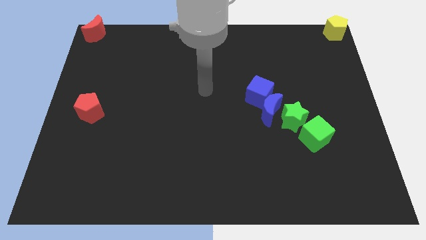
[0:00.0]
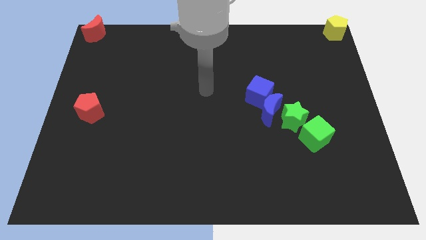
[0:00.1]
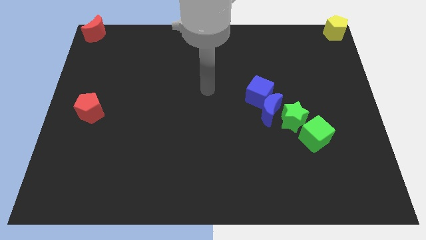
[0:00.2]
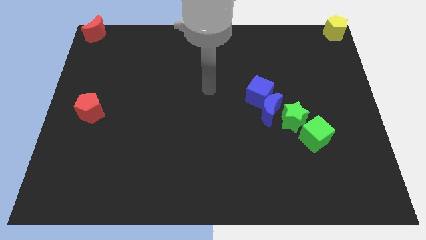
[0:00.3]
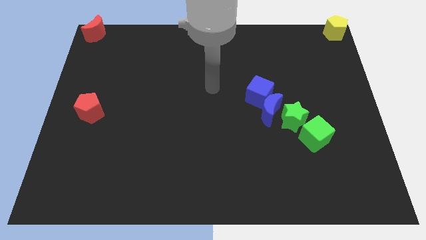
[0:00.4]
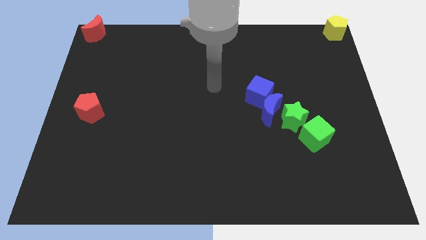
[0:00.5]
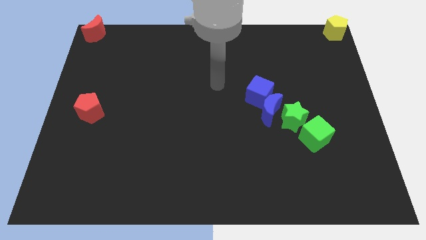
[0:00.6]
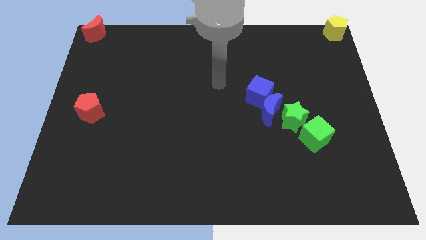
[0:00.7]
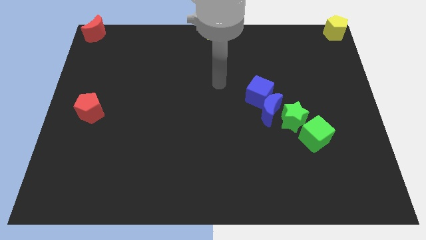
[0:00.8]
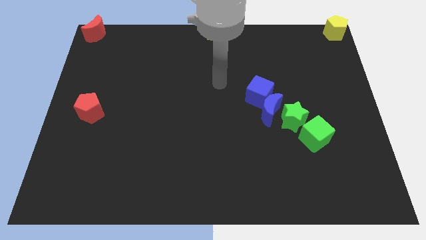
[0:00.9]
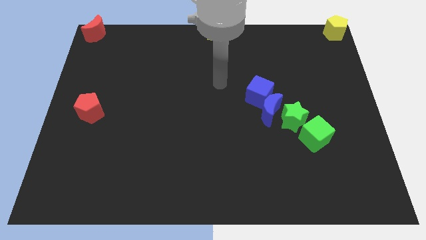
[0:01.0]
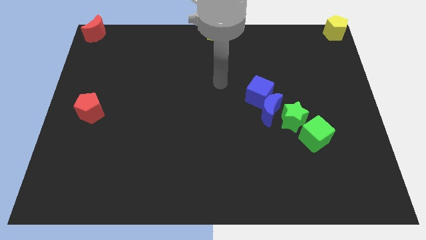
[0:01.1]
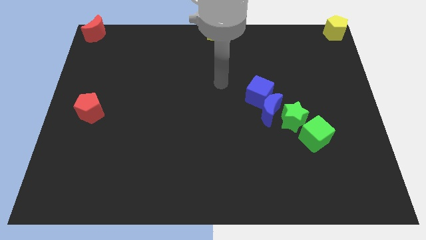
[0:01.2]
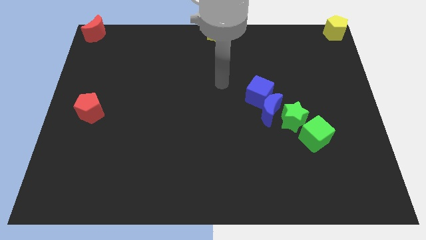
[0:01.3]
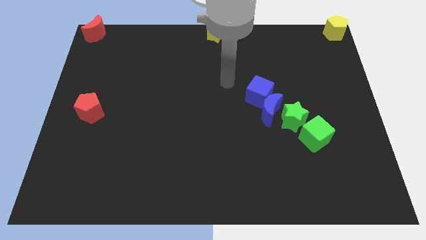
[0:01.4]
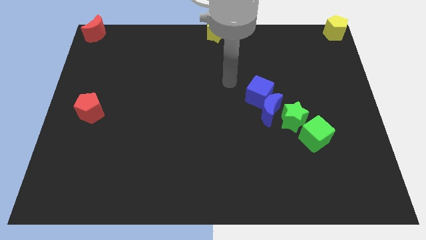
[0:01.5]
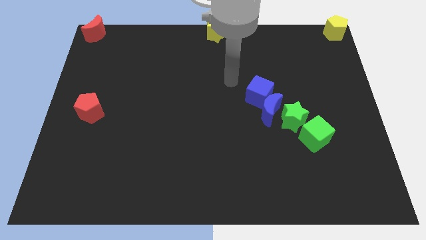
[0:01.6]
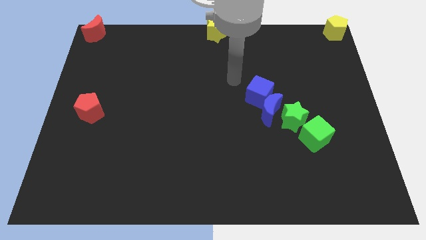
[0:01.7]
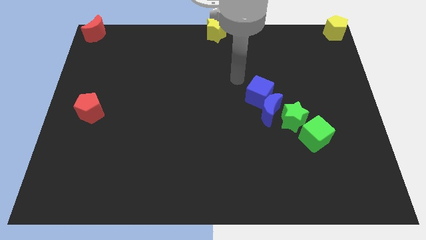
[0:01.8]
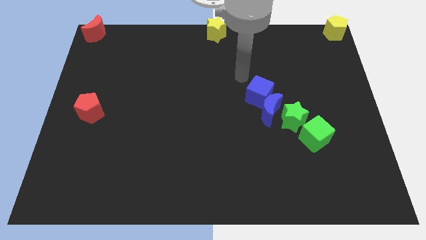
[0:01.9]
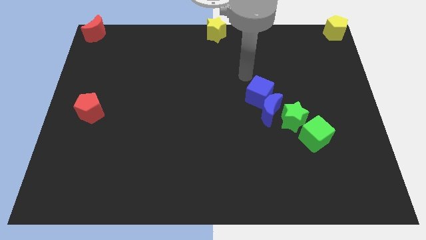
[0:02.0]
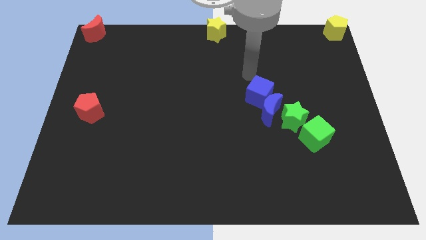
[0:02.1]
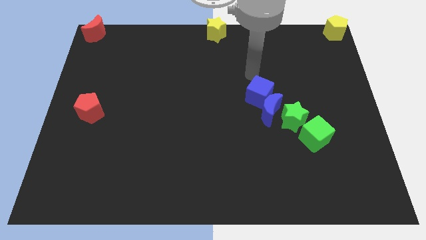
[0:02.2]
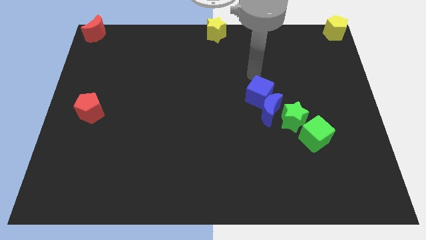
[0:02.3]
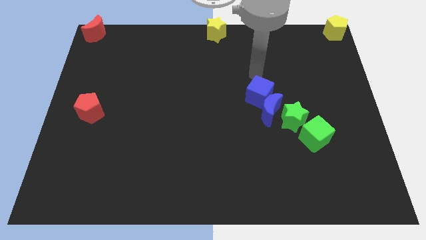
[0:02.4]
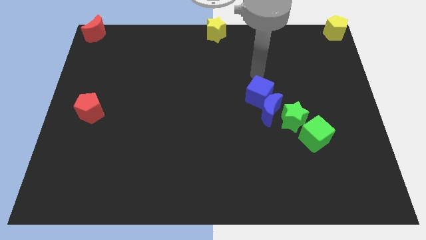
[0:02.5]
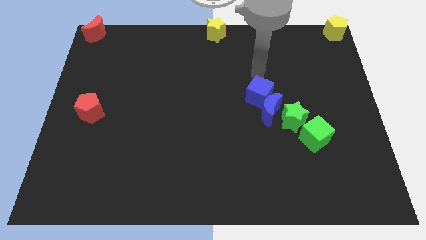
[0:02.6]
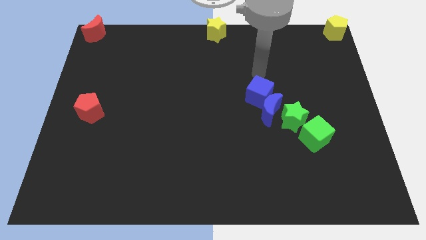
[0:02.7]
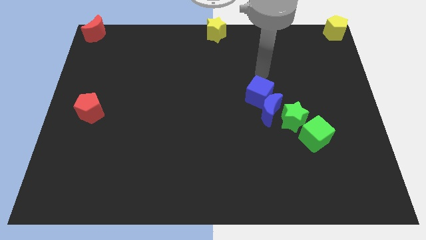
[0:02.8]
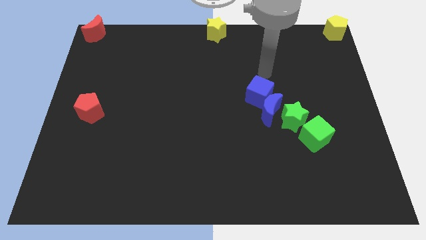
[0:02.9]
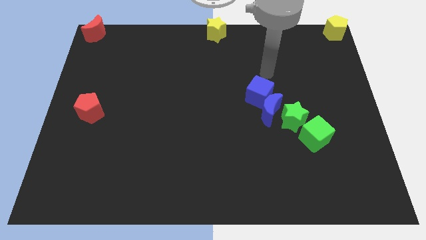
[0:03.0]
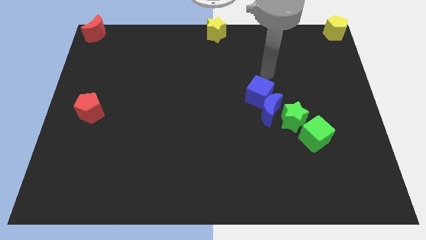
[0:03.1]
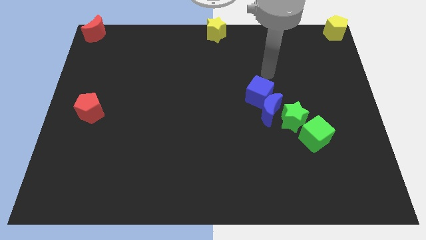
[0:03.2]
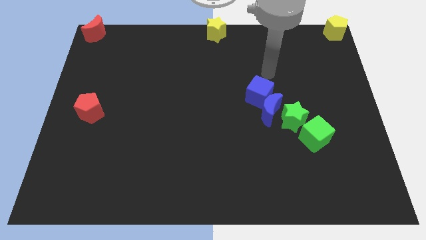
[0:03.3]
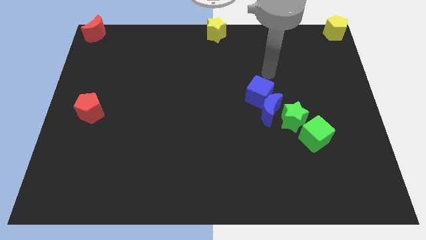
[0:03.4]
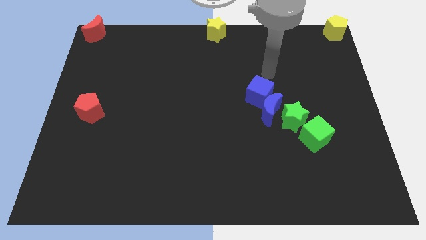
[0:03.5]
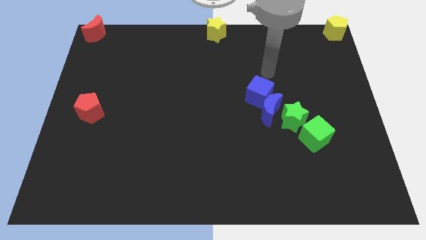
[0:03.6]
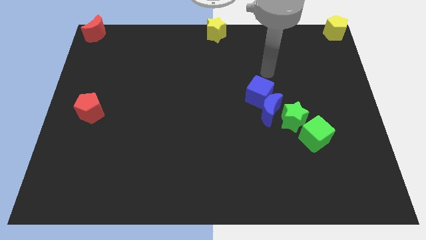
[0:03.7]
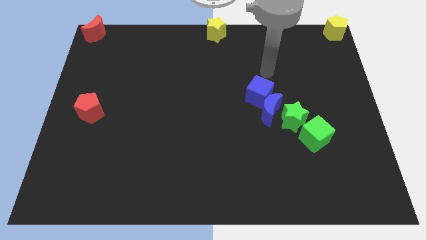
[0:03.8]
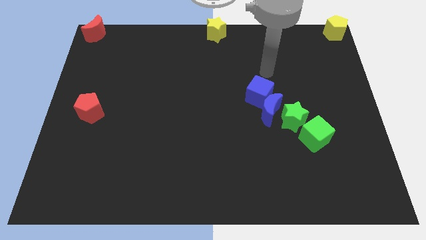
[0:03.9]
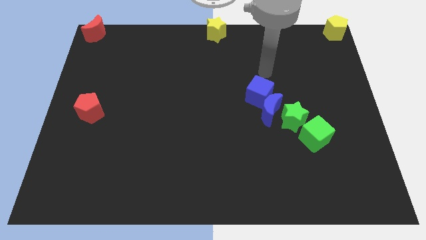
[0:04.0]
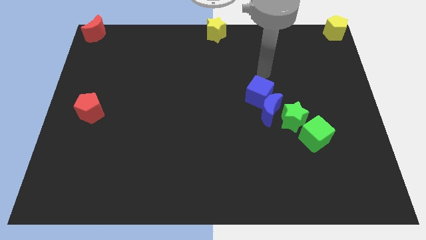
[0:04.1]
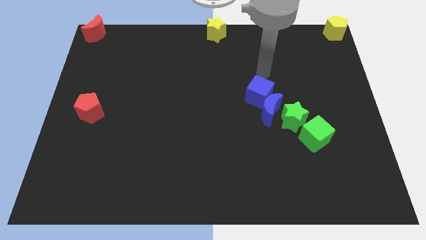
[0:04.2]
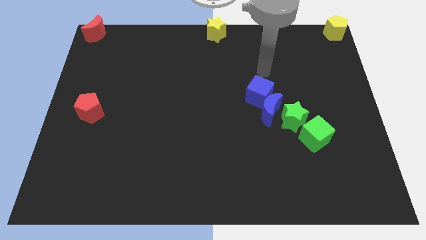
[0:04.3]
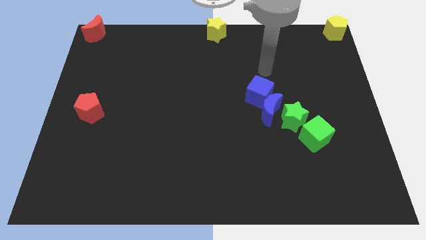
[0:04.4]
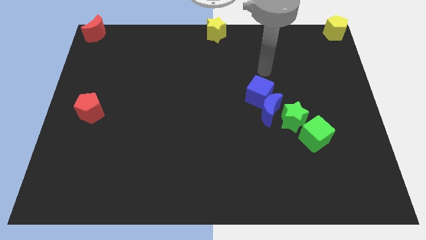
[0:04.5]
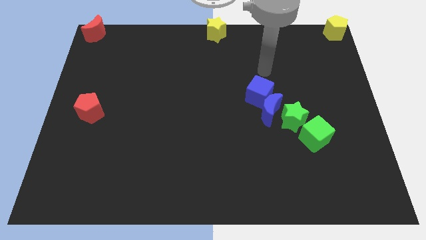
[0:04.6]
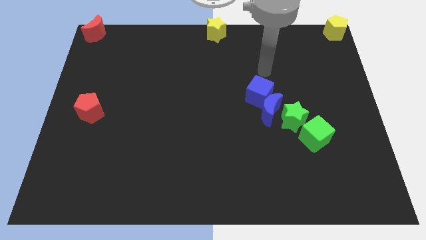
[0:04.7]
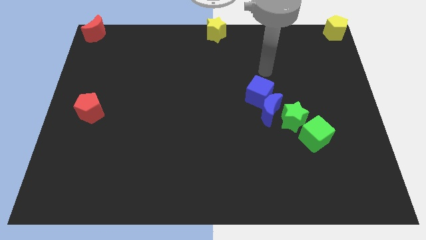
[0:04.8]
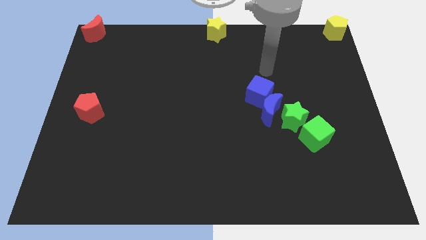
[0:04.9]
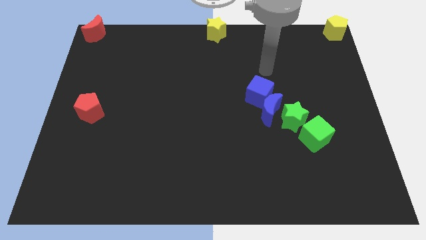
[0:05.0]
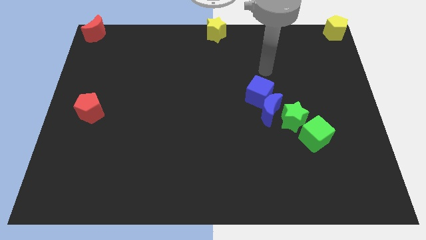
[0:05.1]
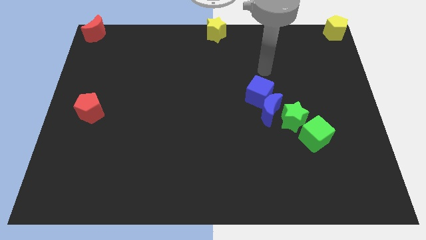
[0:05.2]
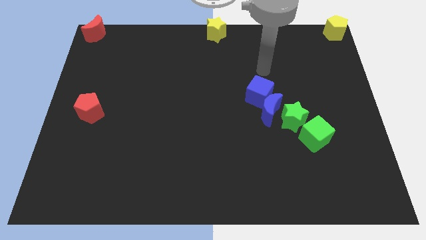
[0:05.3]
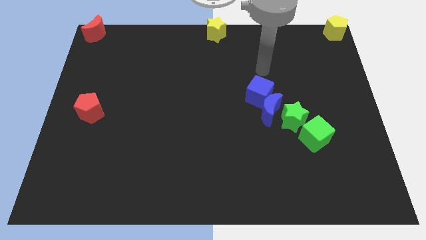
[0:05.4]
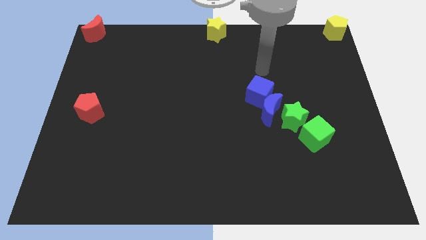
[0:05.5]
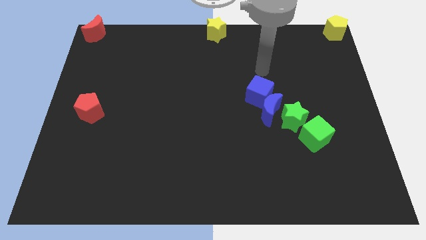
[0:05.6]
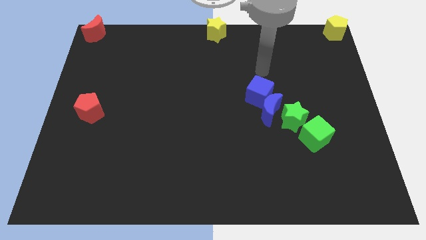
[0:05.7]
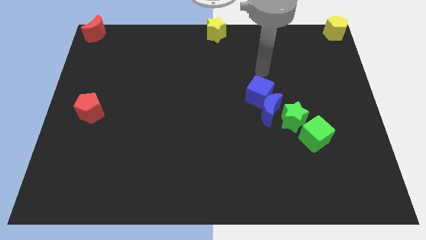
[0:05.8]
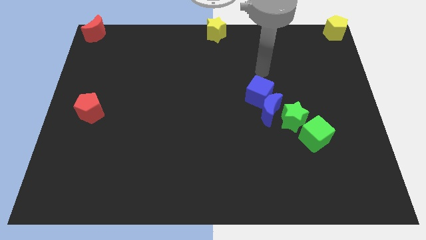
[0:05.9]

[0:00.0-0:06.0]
move your arm towards the blue cube

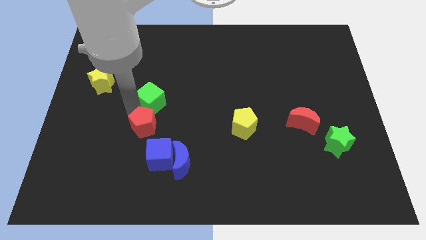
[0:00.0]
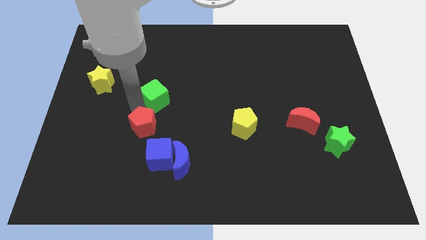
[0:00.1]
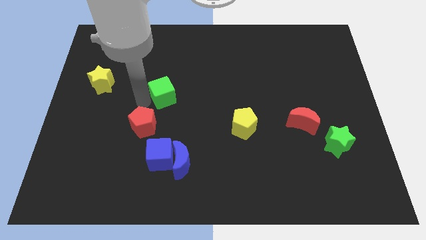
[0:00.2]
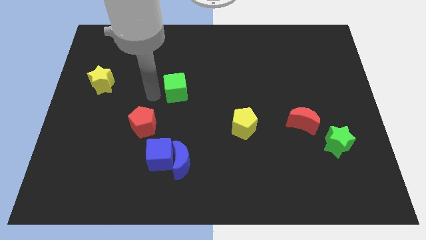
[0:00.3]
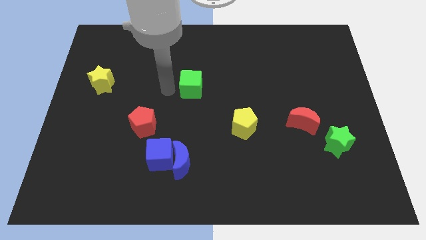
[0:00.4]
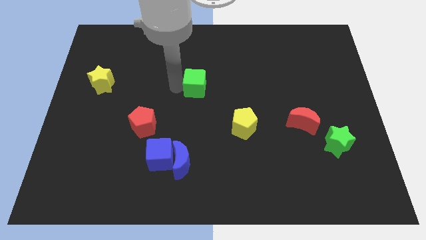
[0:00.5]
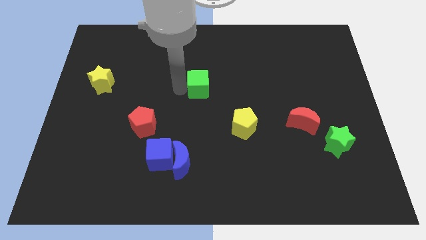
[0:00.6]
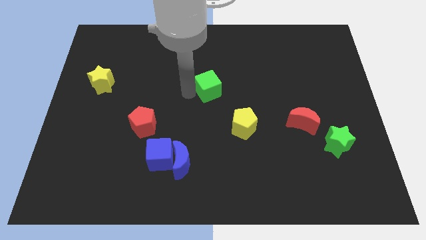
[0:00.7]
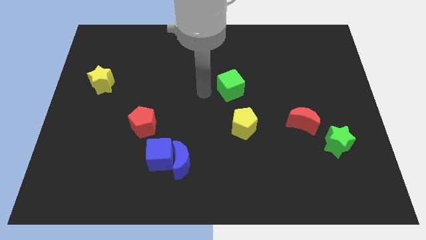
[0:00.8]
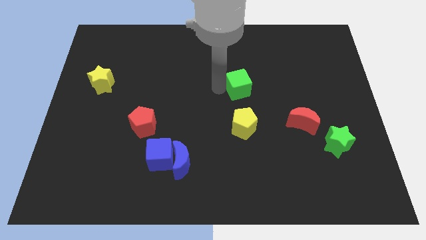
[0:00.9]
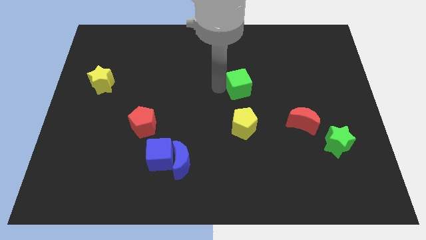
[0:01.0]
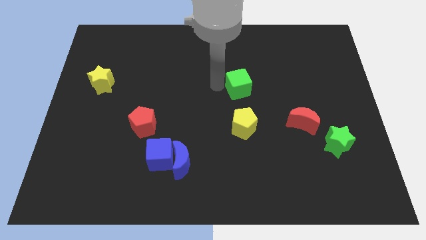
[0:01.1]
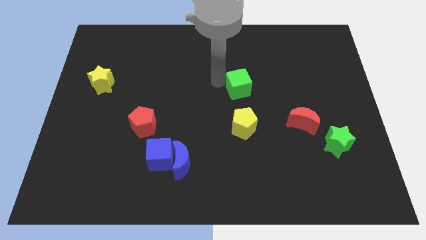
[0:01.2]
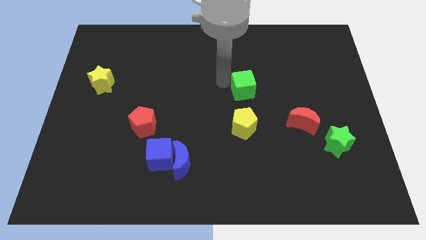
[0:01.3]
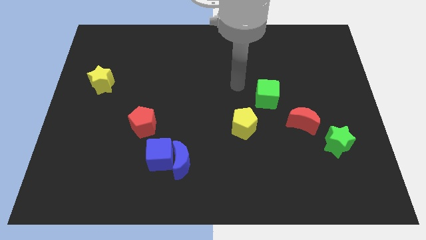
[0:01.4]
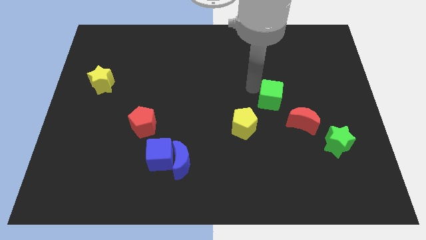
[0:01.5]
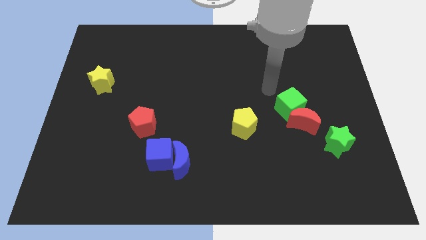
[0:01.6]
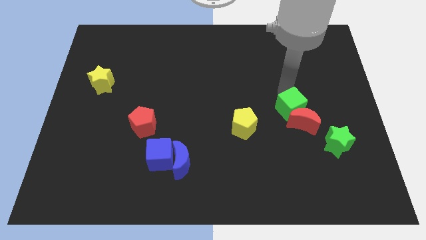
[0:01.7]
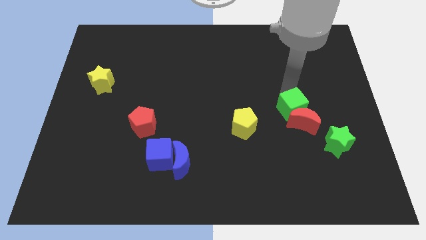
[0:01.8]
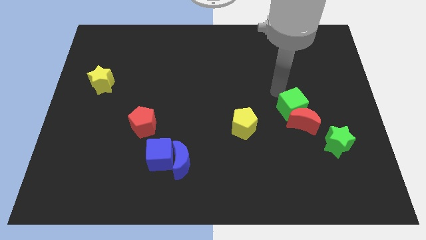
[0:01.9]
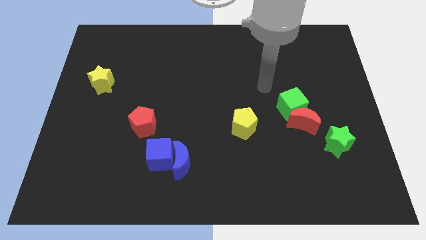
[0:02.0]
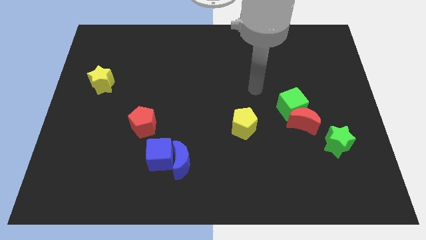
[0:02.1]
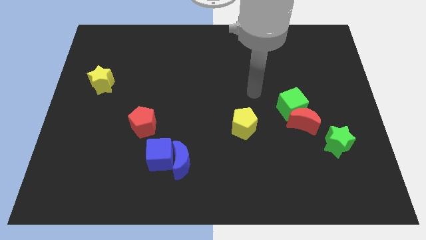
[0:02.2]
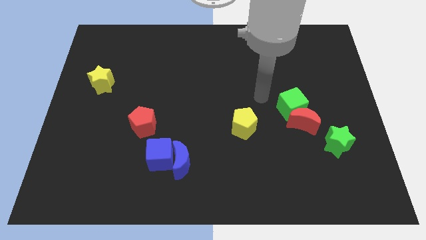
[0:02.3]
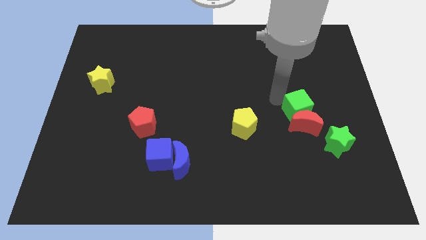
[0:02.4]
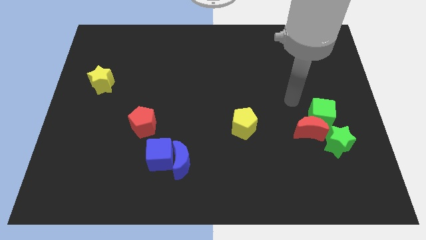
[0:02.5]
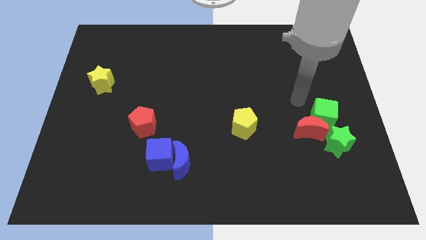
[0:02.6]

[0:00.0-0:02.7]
place the green cube into red crescent
